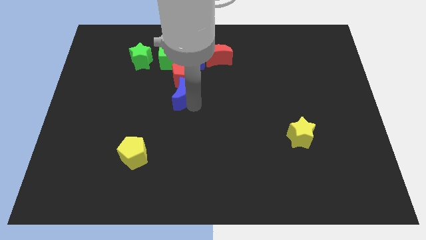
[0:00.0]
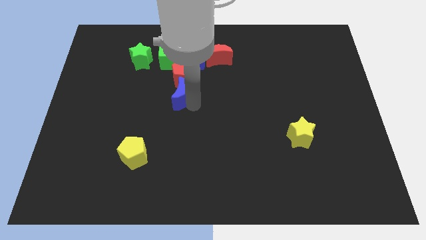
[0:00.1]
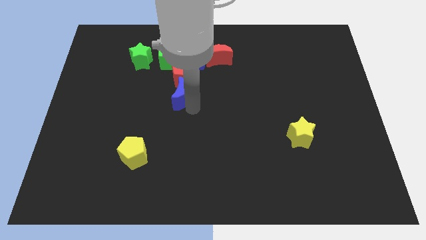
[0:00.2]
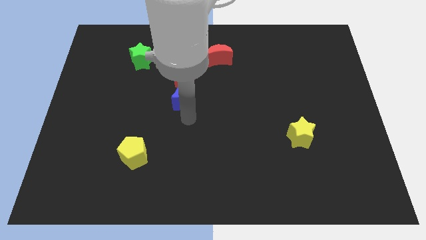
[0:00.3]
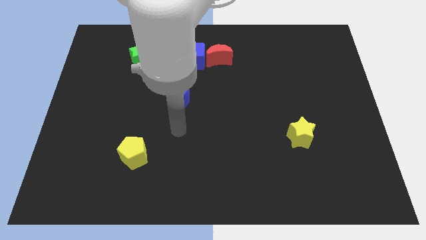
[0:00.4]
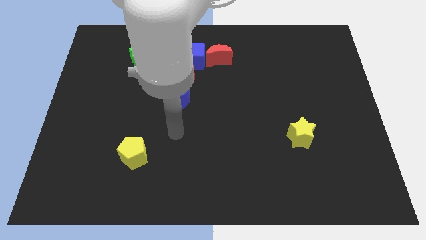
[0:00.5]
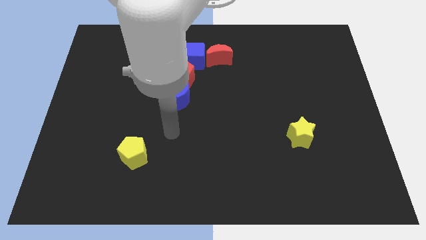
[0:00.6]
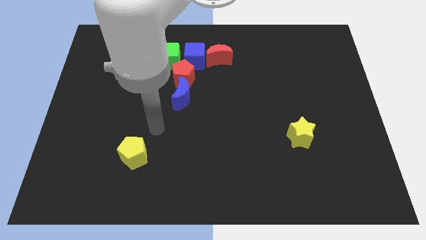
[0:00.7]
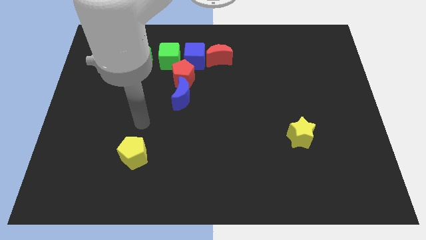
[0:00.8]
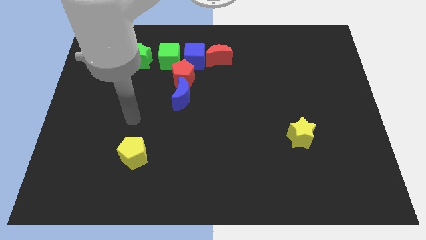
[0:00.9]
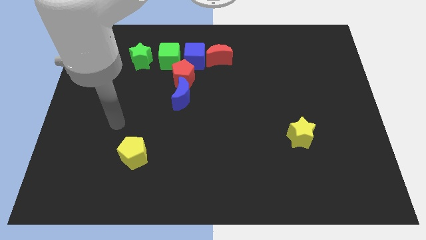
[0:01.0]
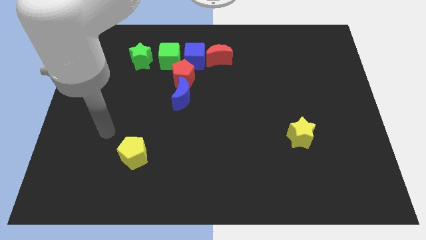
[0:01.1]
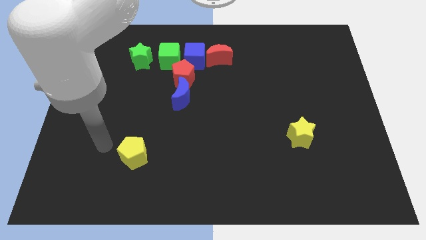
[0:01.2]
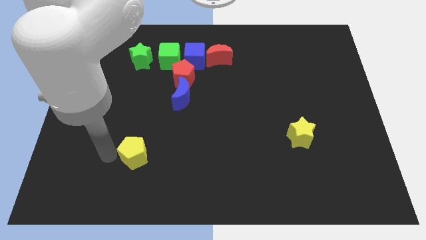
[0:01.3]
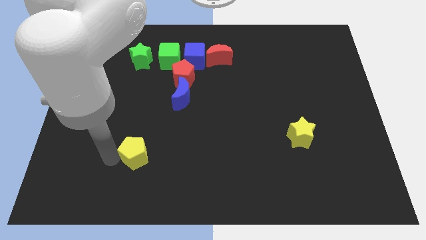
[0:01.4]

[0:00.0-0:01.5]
move your hand towards the left of yellow pentagon

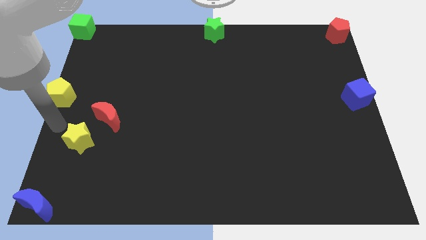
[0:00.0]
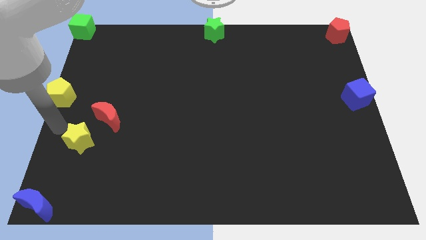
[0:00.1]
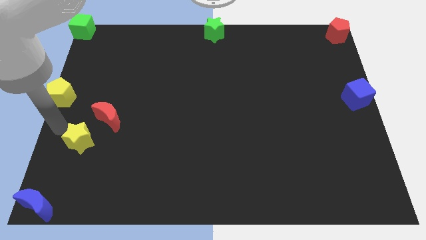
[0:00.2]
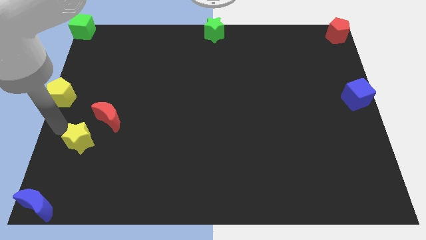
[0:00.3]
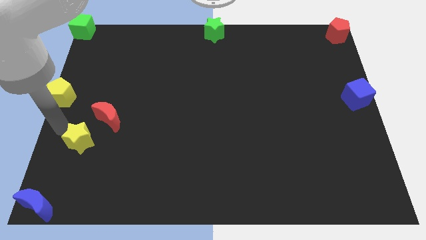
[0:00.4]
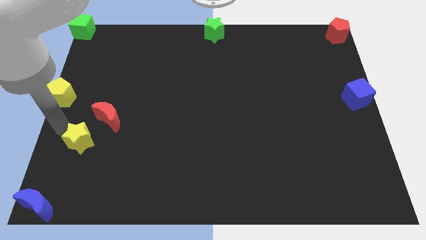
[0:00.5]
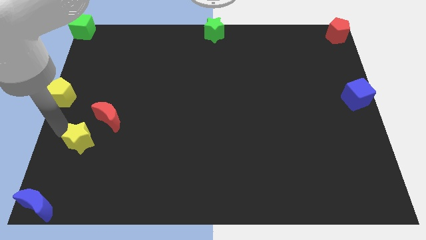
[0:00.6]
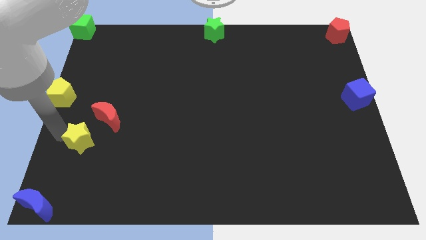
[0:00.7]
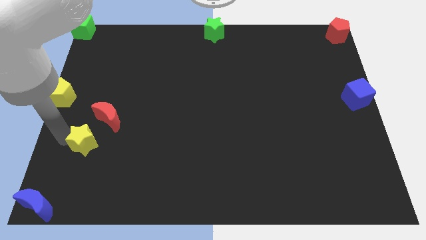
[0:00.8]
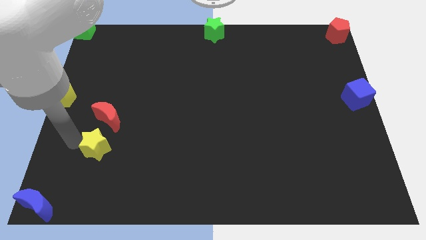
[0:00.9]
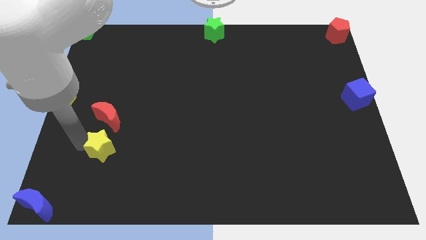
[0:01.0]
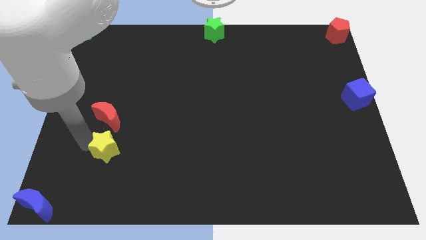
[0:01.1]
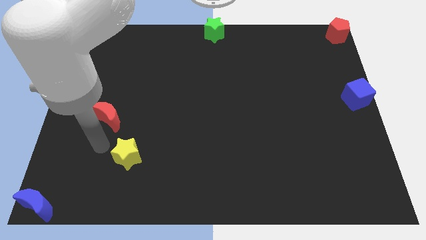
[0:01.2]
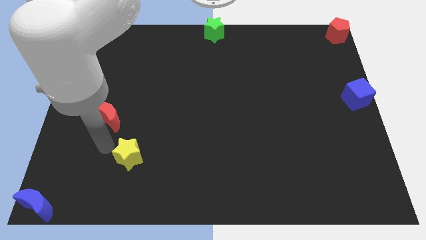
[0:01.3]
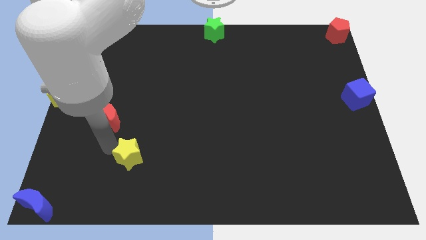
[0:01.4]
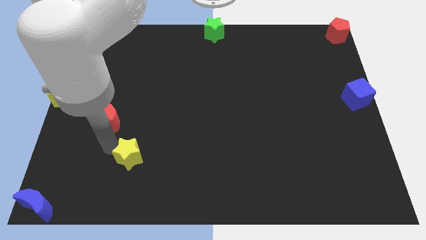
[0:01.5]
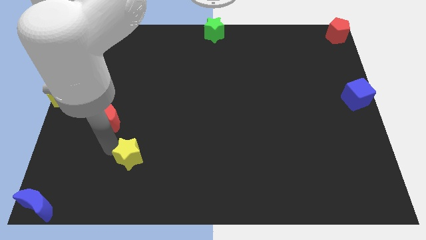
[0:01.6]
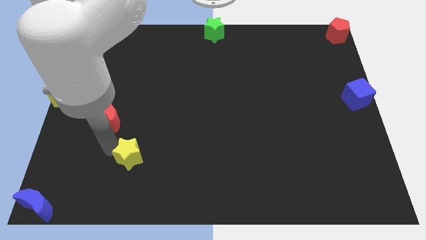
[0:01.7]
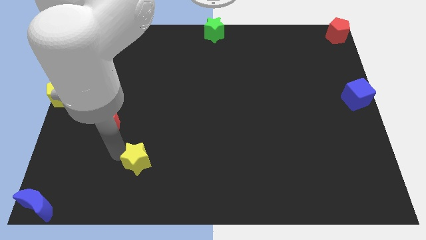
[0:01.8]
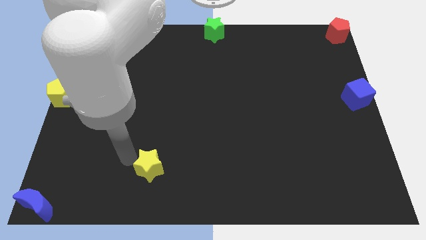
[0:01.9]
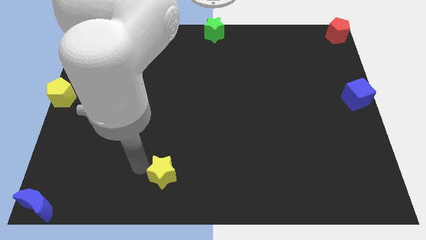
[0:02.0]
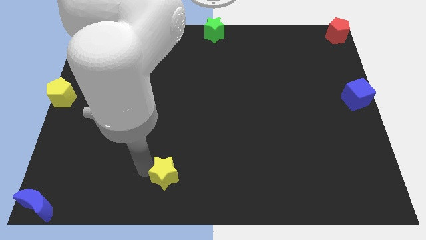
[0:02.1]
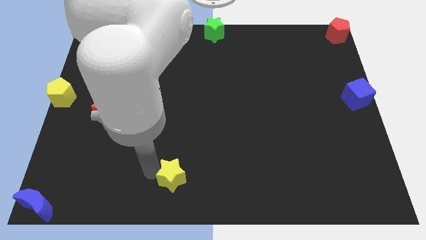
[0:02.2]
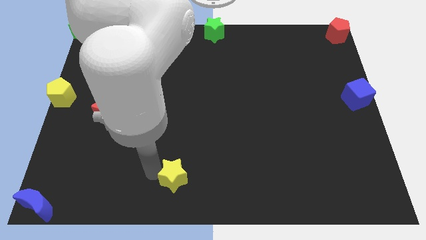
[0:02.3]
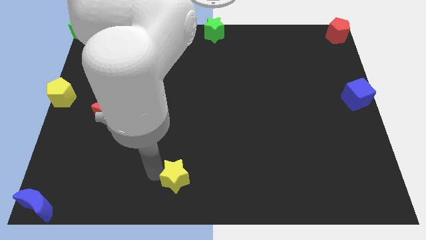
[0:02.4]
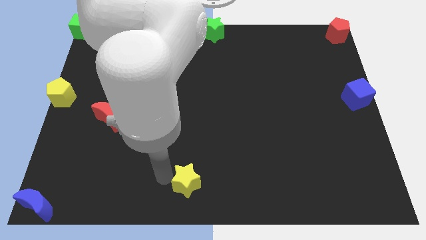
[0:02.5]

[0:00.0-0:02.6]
move the yellow star to the bottom center of the board

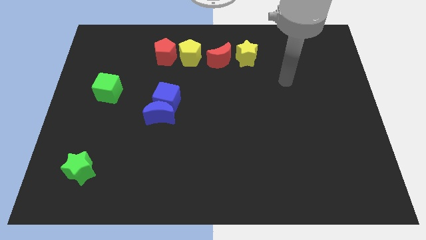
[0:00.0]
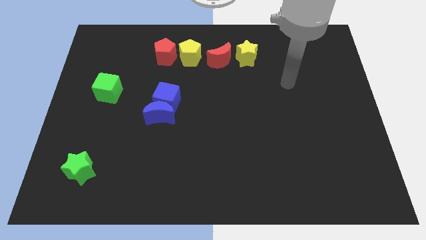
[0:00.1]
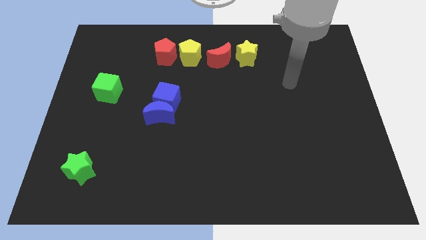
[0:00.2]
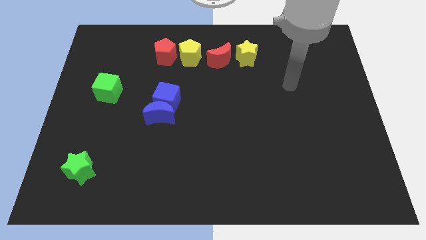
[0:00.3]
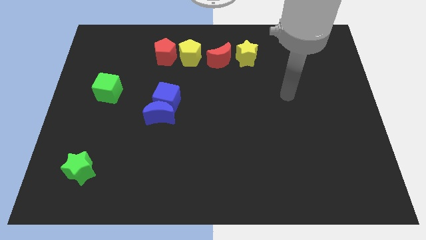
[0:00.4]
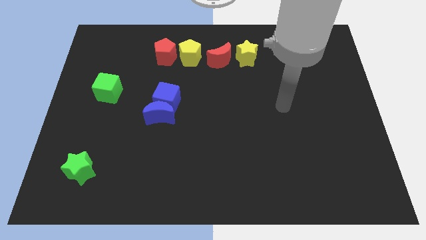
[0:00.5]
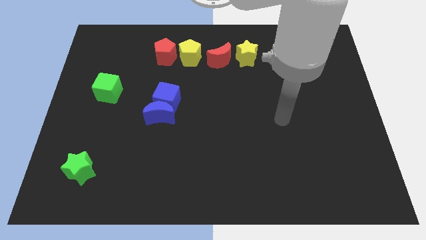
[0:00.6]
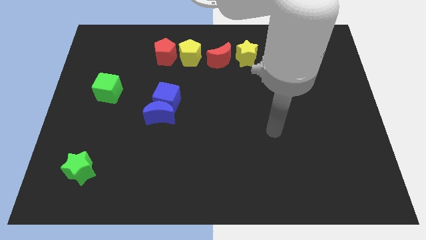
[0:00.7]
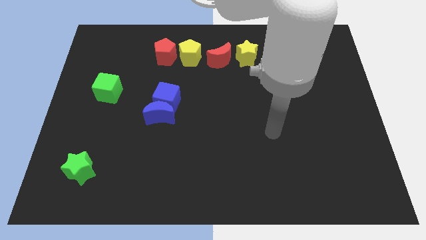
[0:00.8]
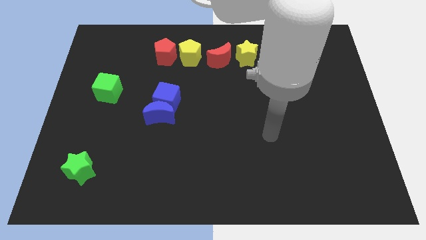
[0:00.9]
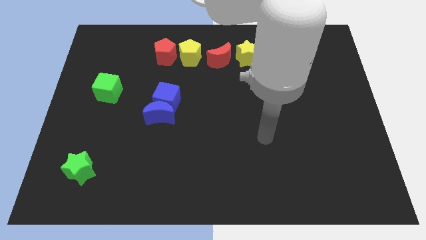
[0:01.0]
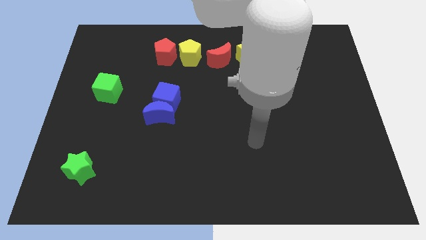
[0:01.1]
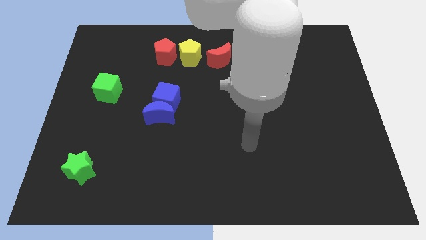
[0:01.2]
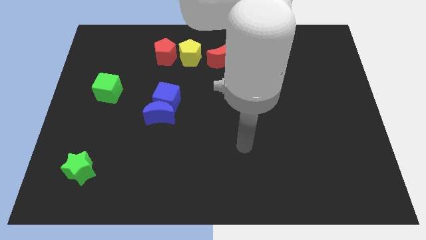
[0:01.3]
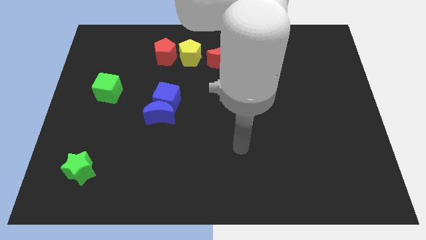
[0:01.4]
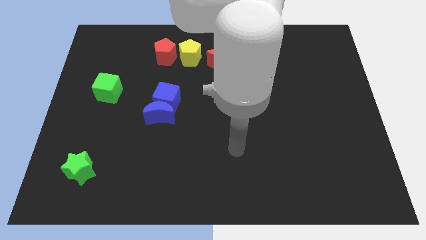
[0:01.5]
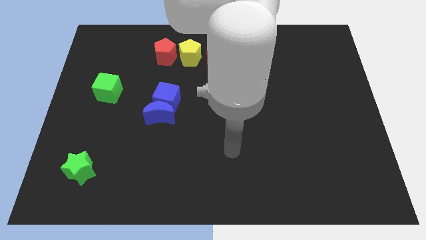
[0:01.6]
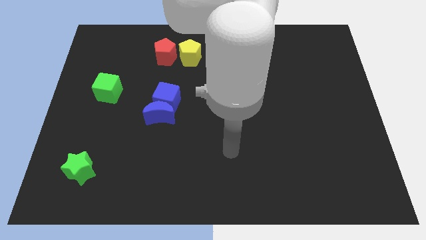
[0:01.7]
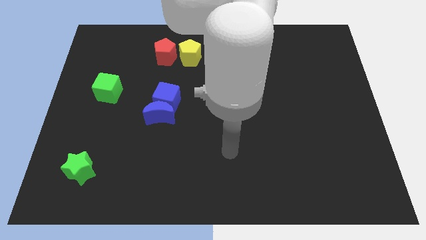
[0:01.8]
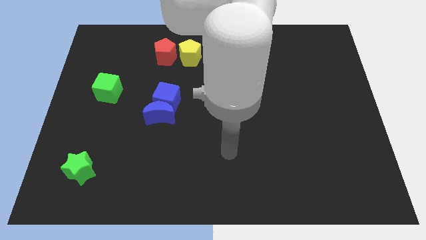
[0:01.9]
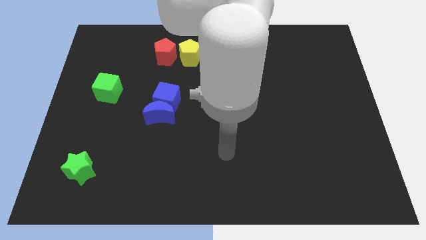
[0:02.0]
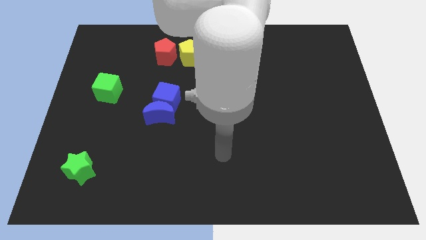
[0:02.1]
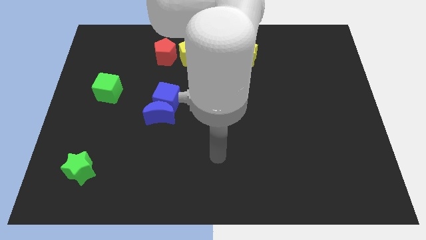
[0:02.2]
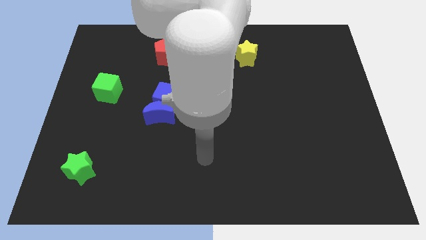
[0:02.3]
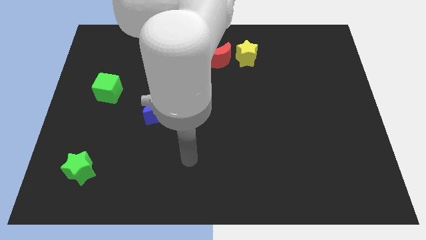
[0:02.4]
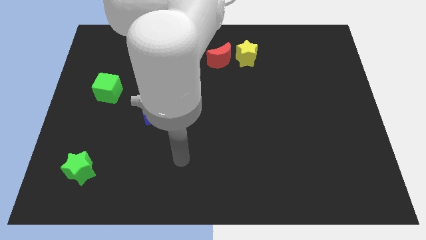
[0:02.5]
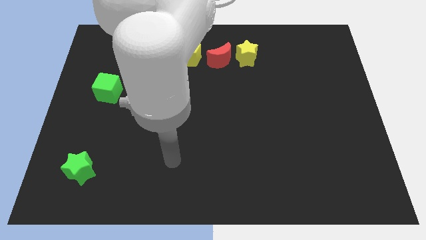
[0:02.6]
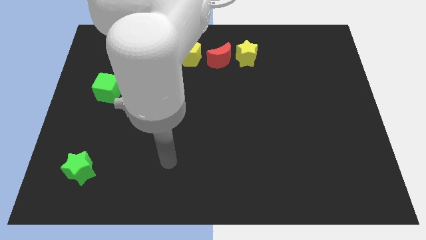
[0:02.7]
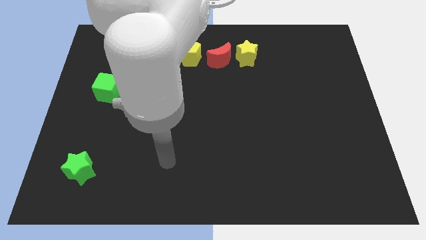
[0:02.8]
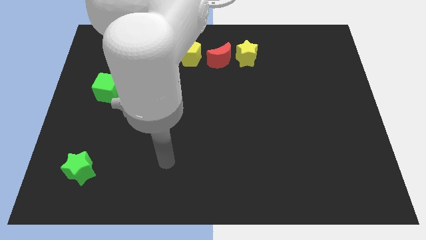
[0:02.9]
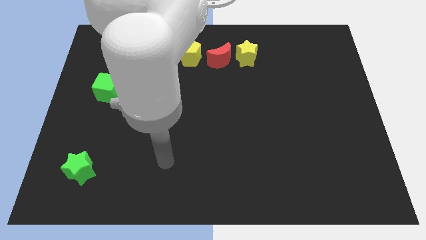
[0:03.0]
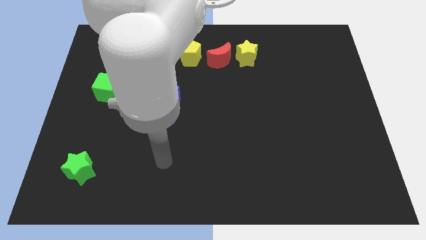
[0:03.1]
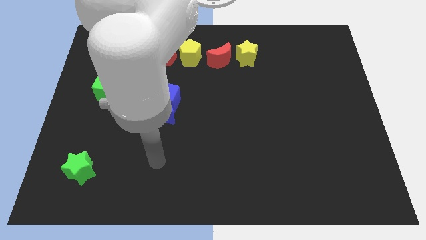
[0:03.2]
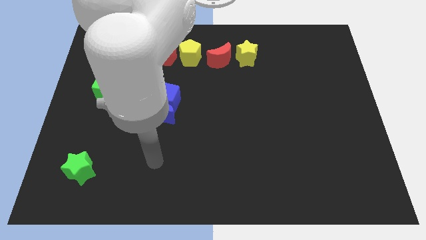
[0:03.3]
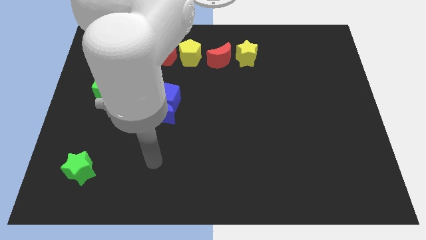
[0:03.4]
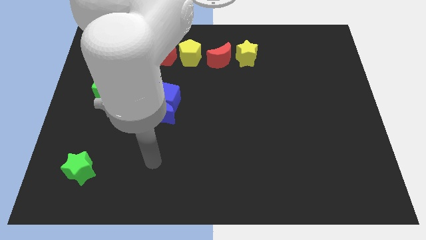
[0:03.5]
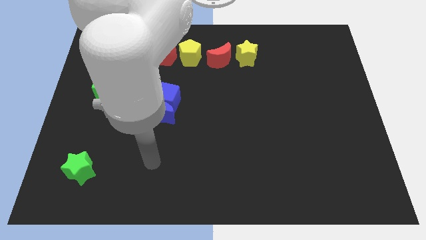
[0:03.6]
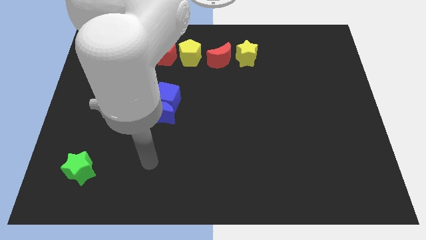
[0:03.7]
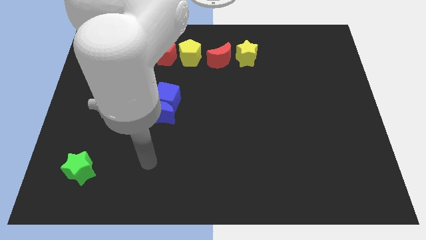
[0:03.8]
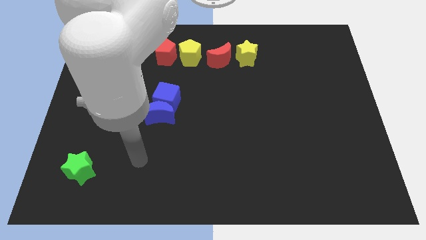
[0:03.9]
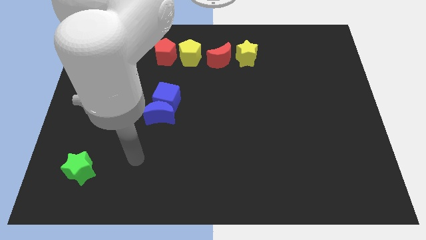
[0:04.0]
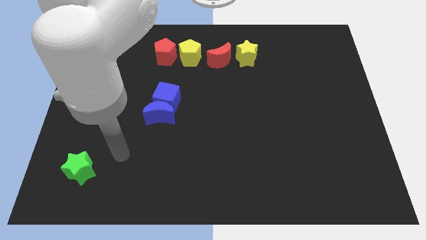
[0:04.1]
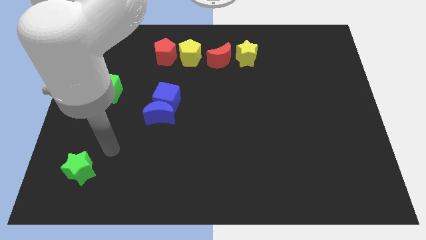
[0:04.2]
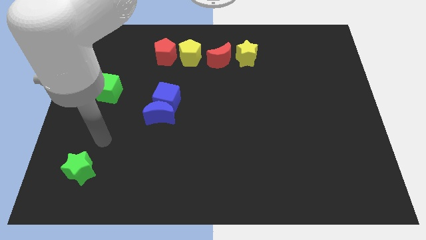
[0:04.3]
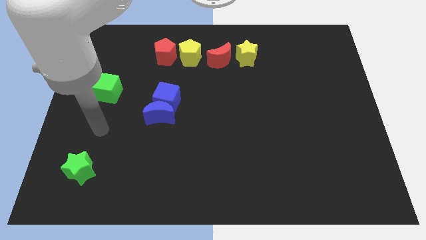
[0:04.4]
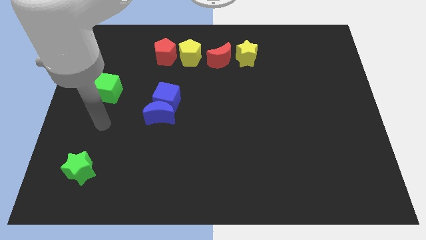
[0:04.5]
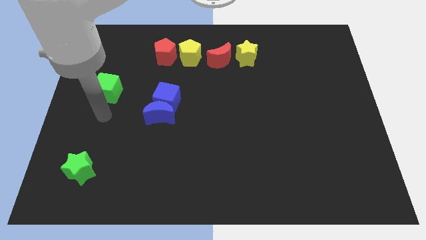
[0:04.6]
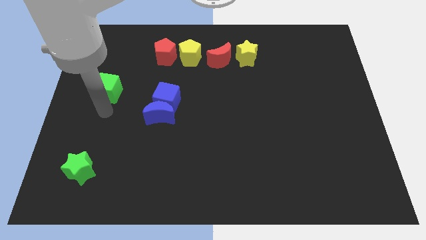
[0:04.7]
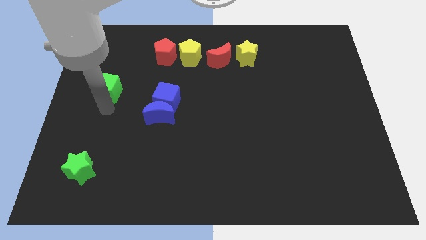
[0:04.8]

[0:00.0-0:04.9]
point your arm below the green cube
